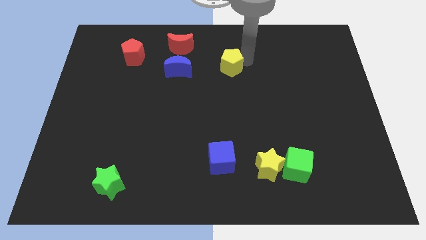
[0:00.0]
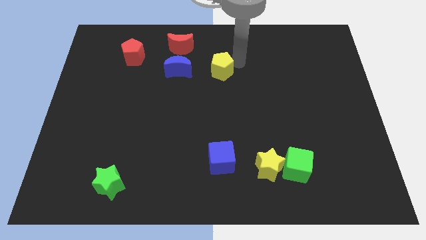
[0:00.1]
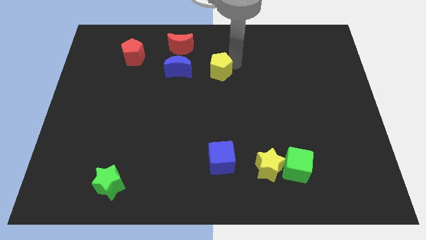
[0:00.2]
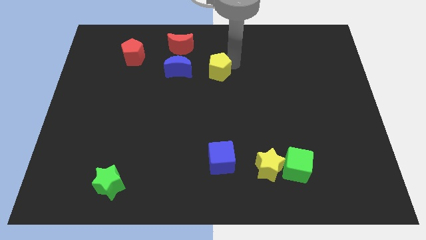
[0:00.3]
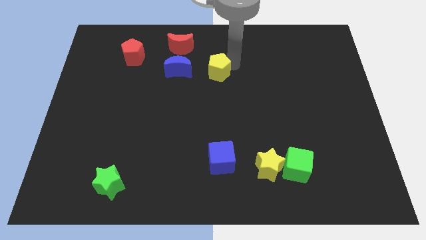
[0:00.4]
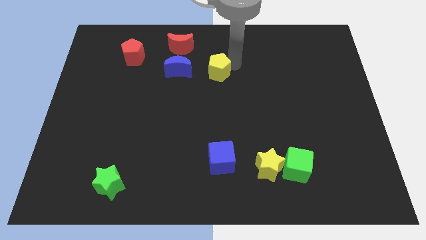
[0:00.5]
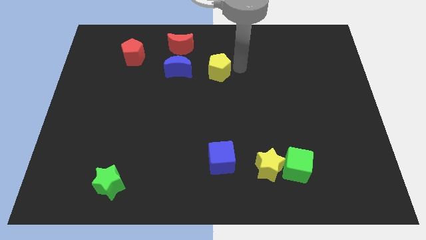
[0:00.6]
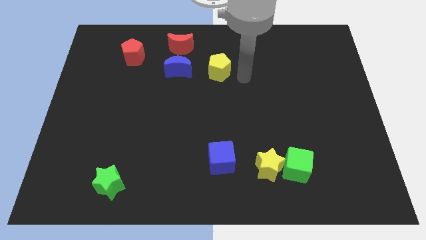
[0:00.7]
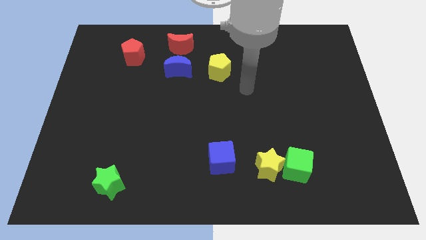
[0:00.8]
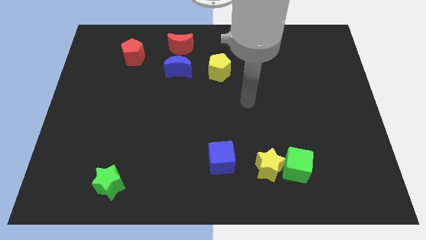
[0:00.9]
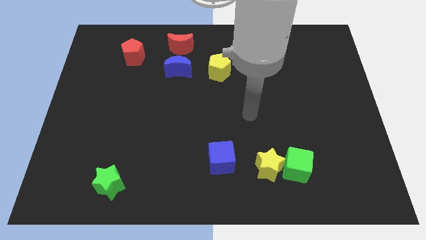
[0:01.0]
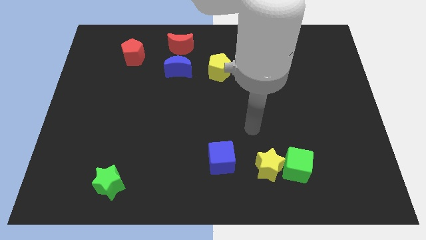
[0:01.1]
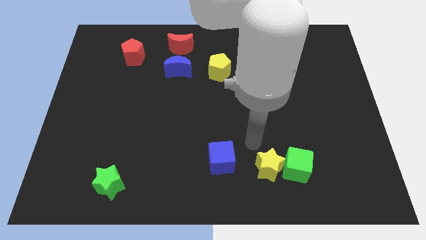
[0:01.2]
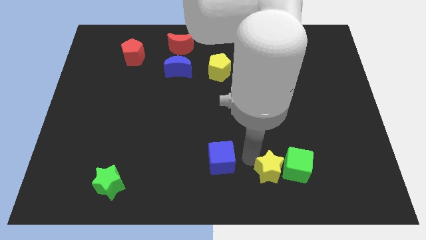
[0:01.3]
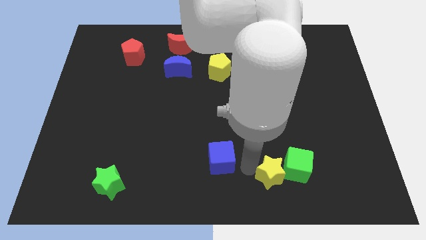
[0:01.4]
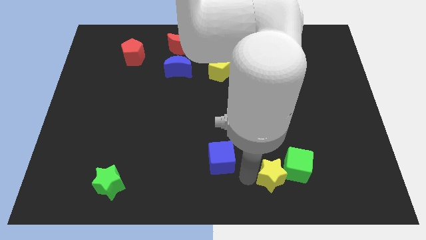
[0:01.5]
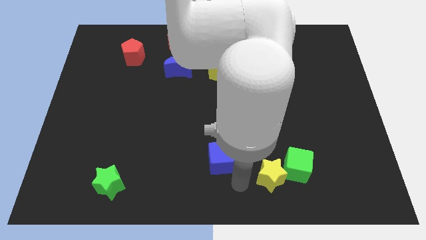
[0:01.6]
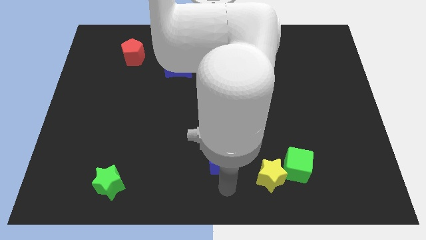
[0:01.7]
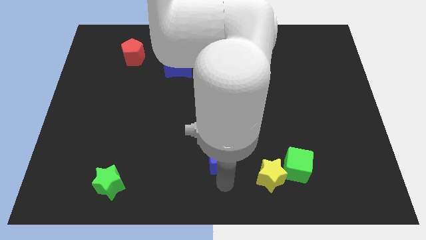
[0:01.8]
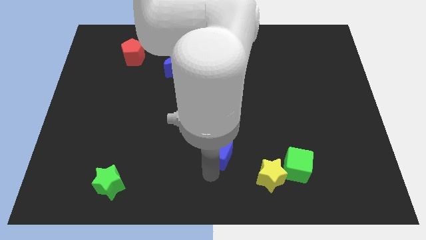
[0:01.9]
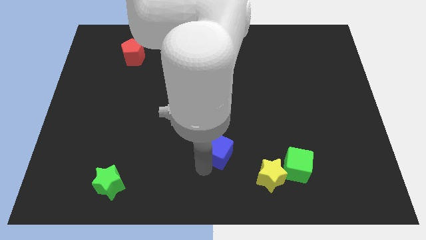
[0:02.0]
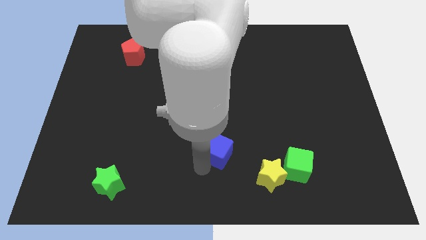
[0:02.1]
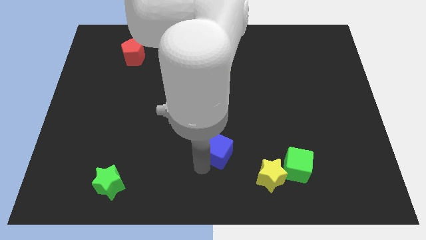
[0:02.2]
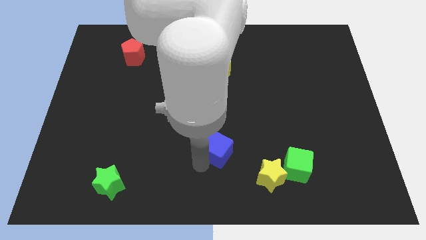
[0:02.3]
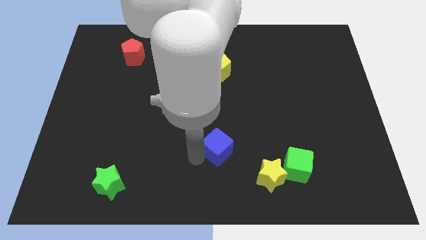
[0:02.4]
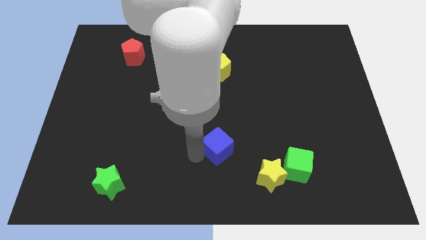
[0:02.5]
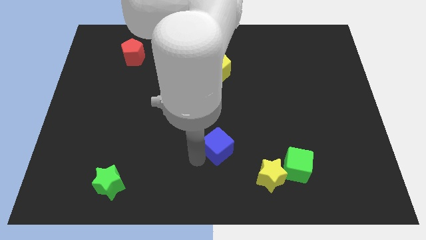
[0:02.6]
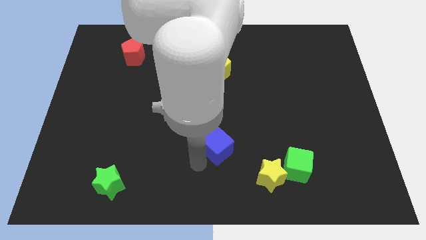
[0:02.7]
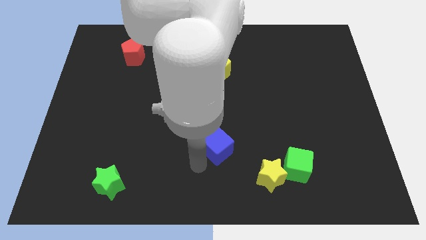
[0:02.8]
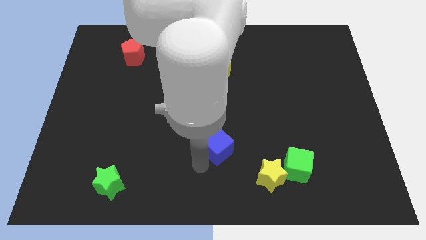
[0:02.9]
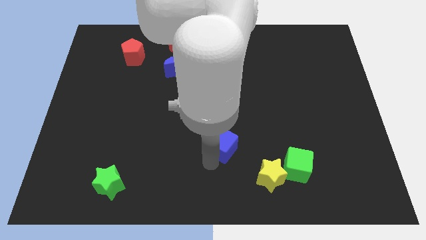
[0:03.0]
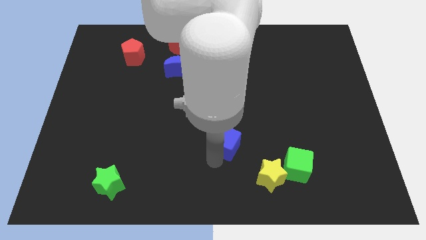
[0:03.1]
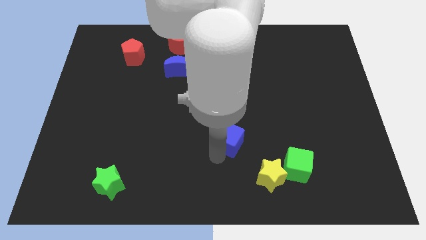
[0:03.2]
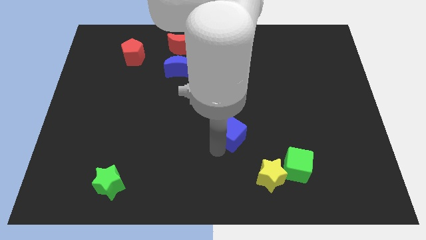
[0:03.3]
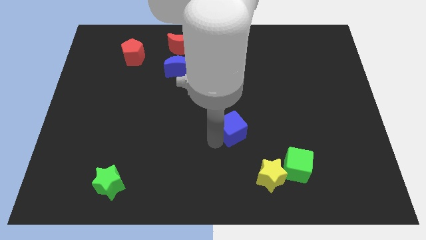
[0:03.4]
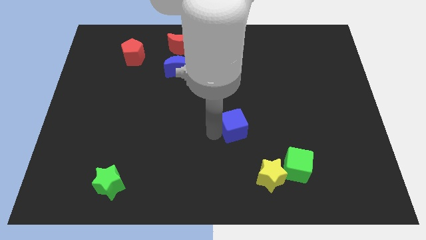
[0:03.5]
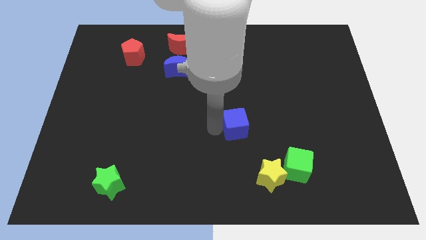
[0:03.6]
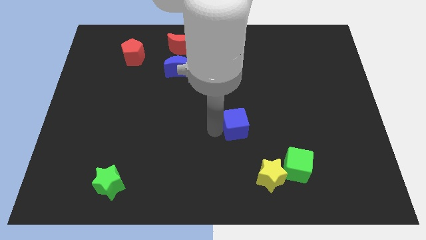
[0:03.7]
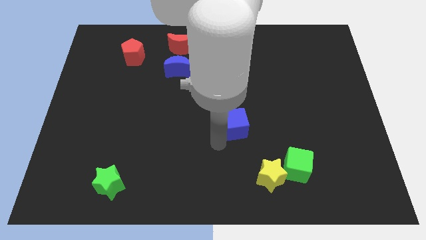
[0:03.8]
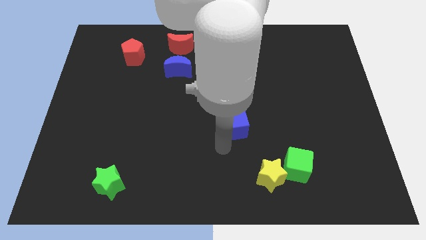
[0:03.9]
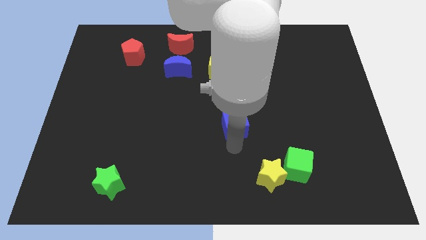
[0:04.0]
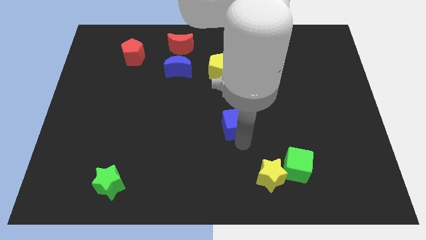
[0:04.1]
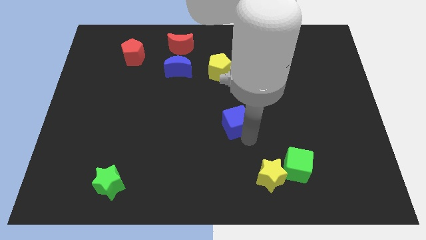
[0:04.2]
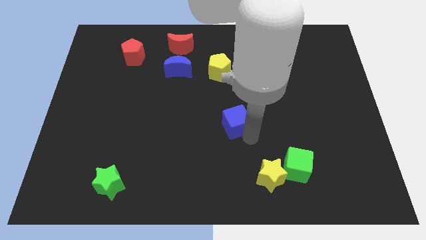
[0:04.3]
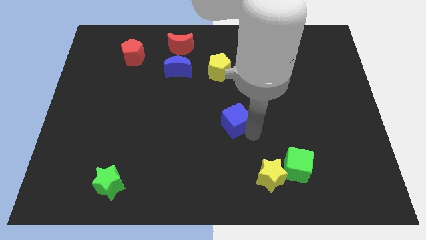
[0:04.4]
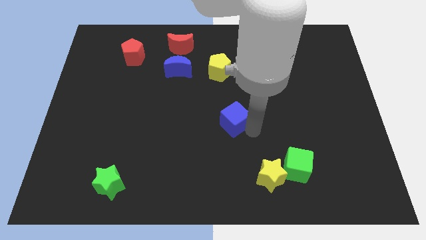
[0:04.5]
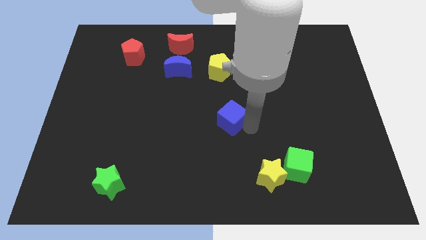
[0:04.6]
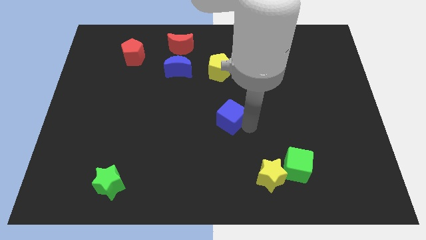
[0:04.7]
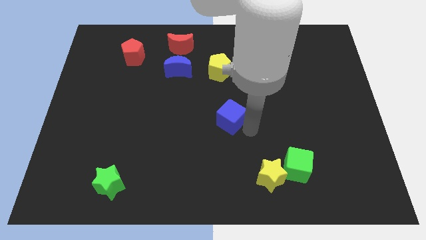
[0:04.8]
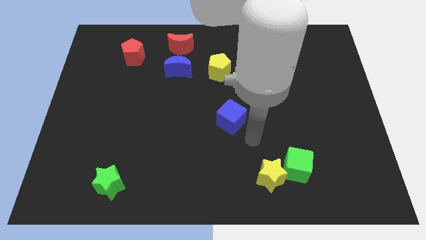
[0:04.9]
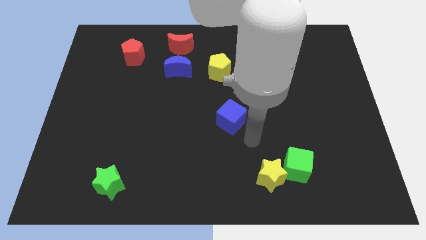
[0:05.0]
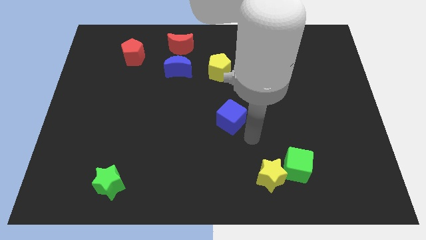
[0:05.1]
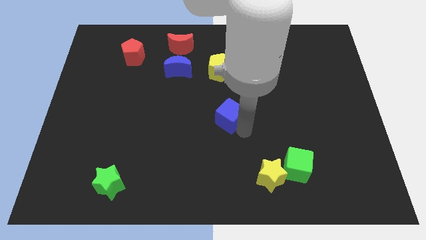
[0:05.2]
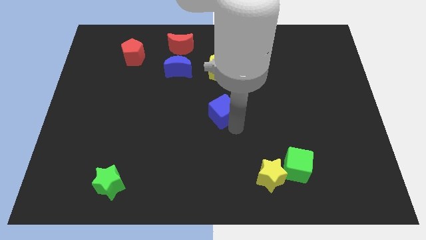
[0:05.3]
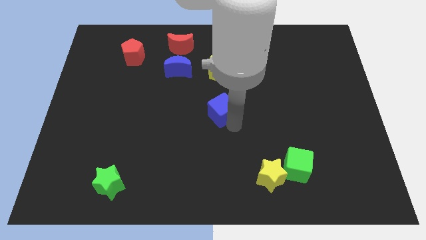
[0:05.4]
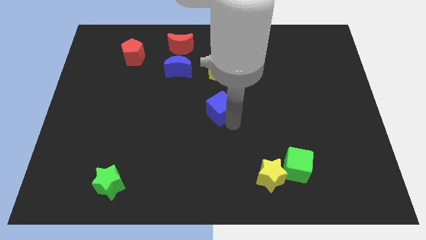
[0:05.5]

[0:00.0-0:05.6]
place the blue cube vertically below the yellow pentagon

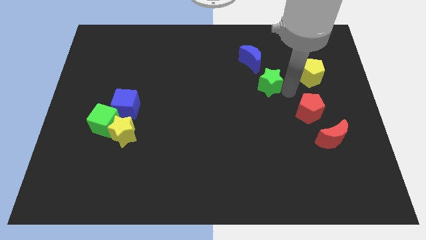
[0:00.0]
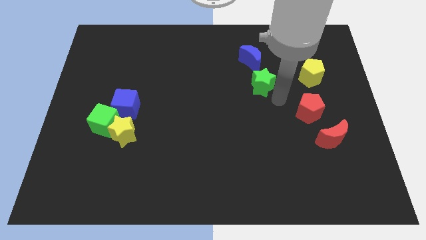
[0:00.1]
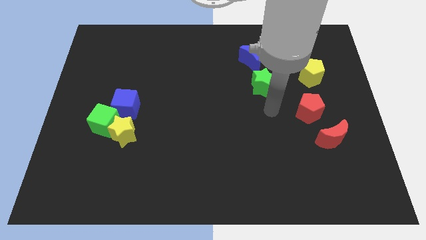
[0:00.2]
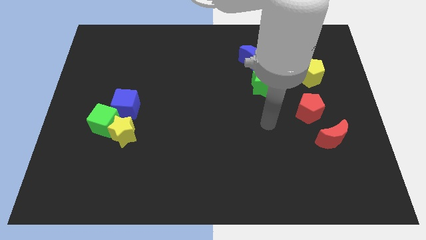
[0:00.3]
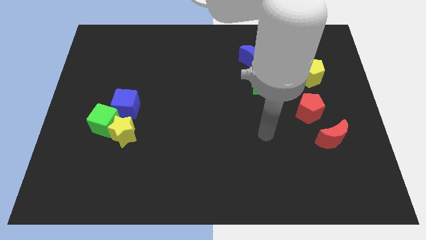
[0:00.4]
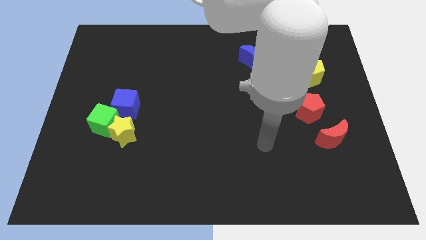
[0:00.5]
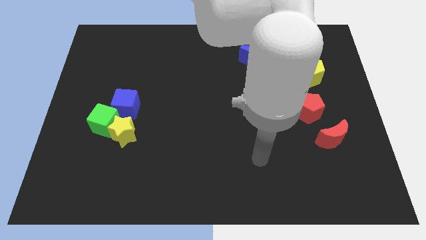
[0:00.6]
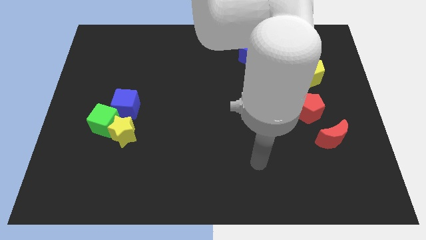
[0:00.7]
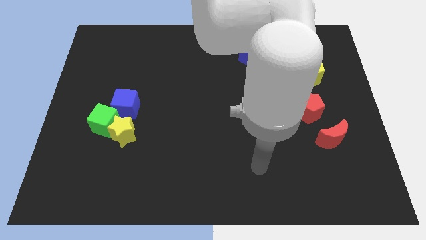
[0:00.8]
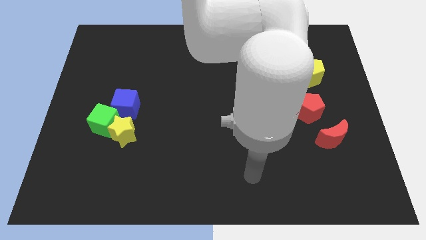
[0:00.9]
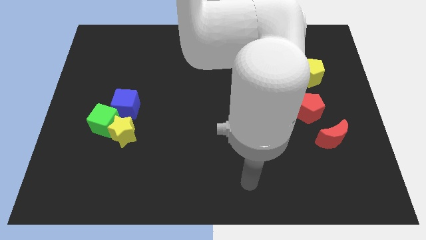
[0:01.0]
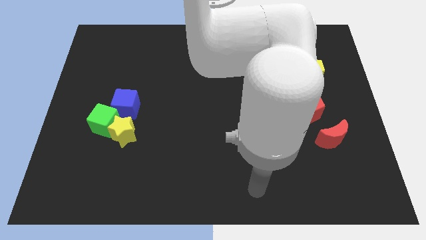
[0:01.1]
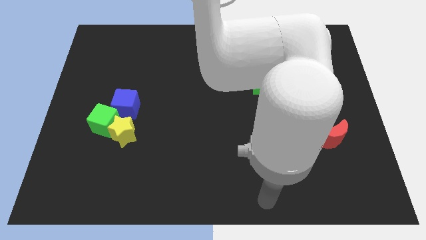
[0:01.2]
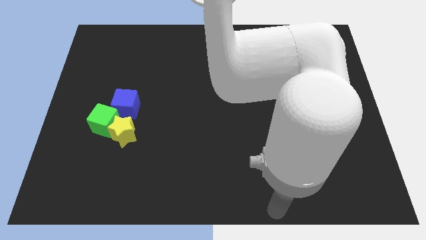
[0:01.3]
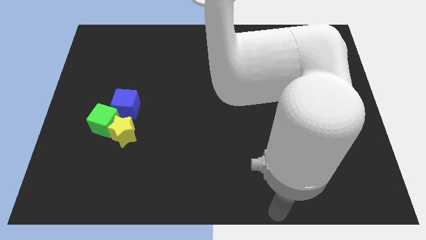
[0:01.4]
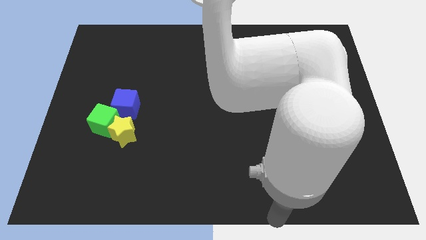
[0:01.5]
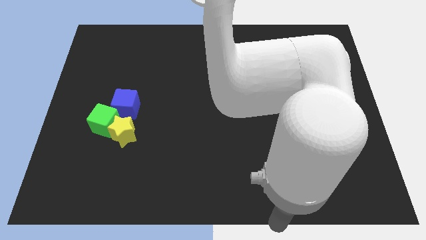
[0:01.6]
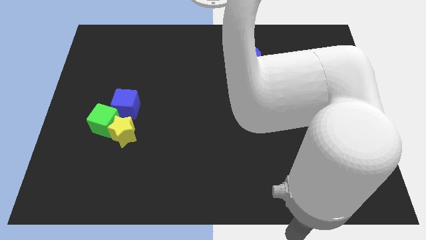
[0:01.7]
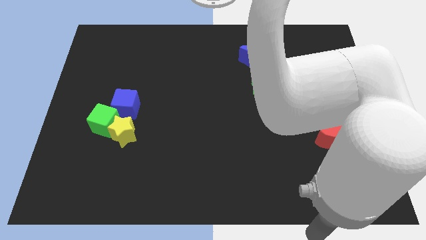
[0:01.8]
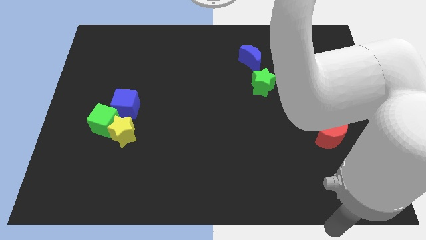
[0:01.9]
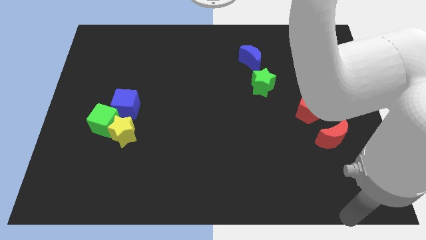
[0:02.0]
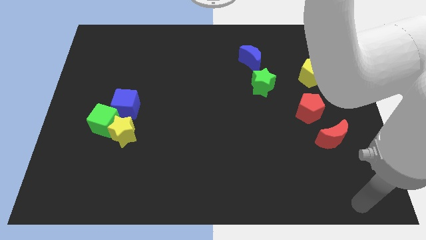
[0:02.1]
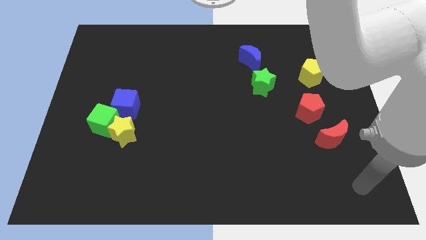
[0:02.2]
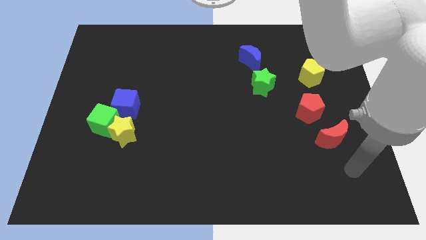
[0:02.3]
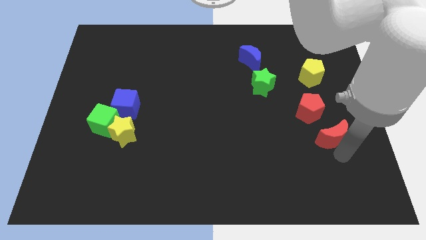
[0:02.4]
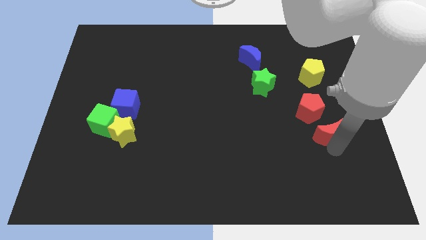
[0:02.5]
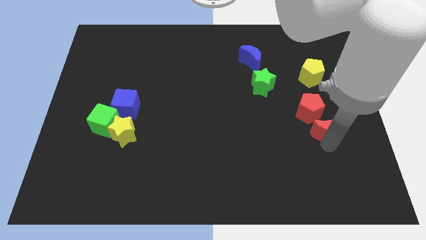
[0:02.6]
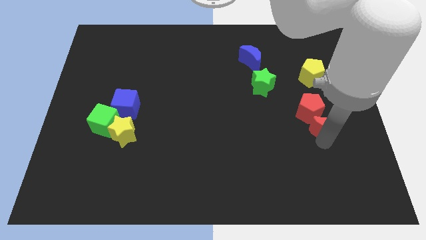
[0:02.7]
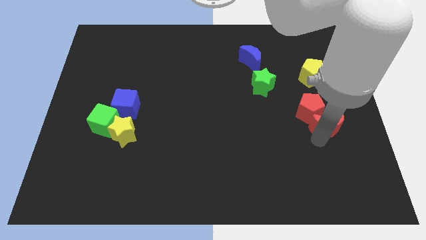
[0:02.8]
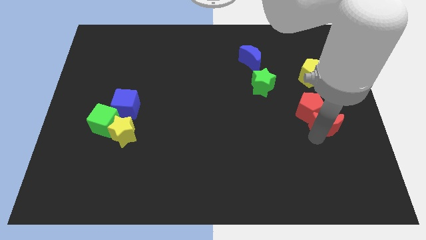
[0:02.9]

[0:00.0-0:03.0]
place the arm below the red moon

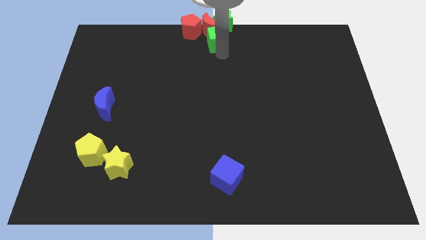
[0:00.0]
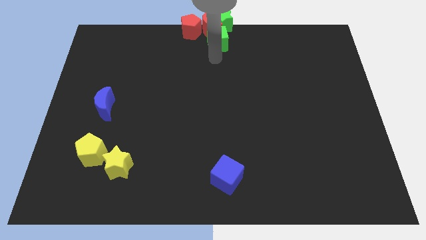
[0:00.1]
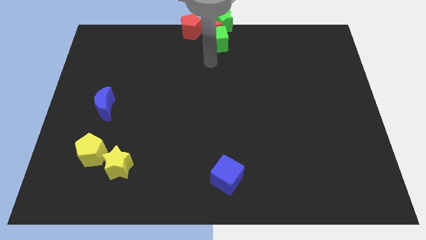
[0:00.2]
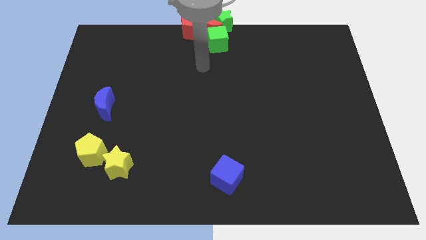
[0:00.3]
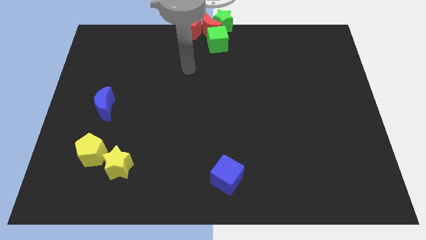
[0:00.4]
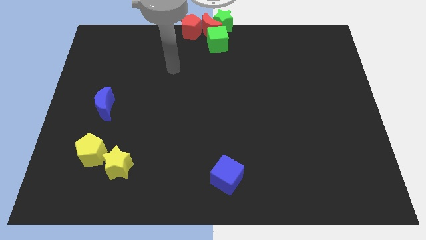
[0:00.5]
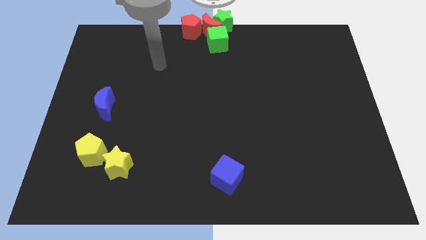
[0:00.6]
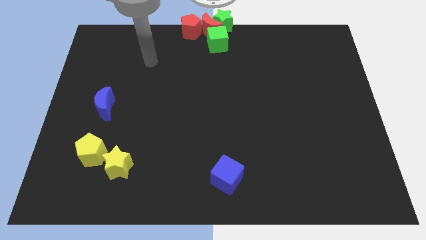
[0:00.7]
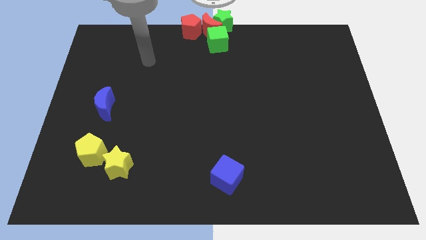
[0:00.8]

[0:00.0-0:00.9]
move the arm away from the green cube
